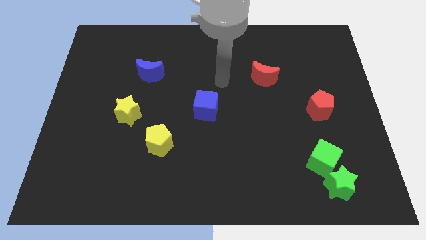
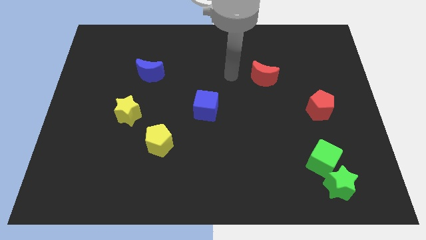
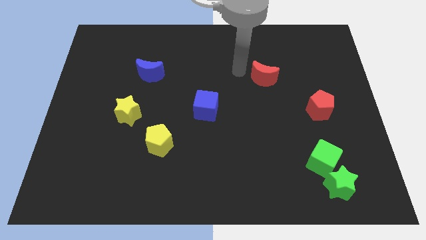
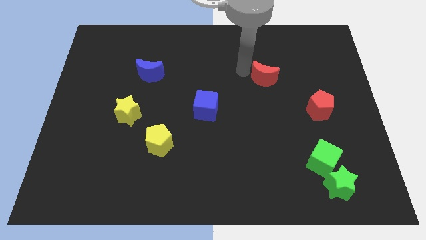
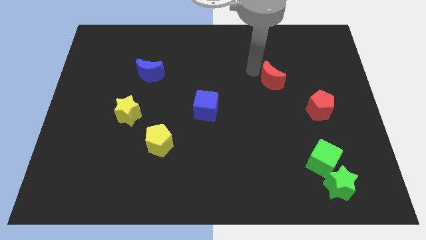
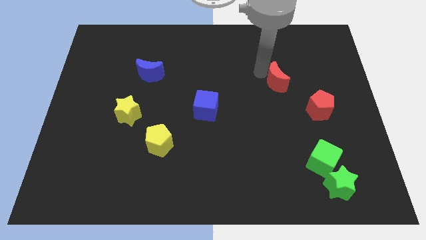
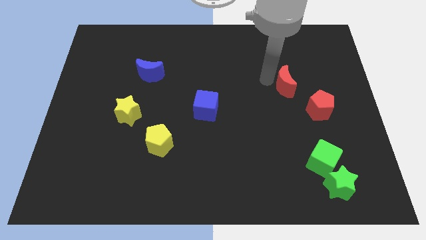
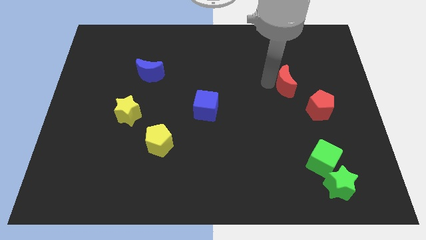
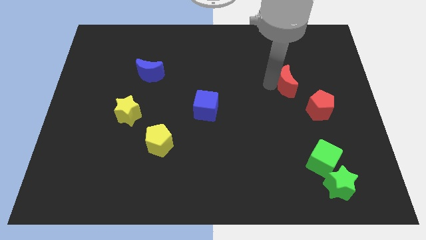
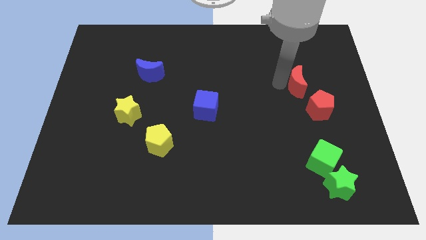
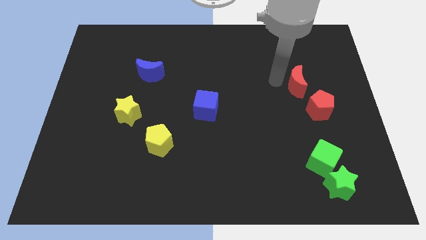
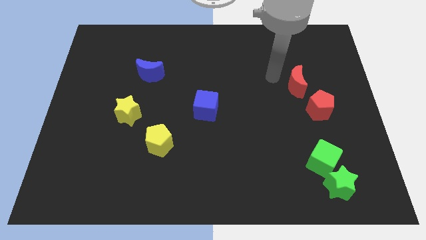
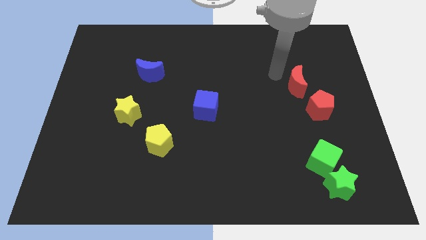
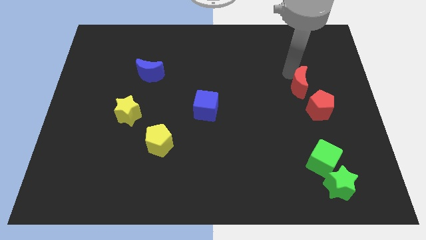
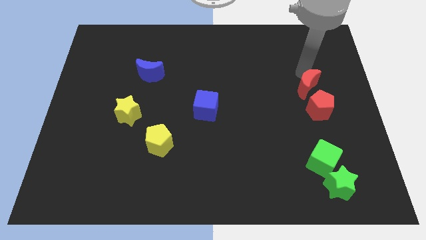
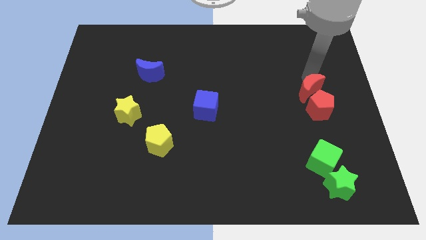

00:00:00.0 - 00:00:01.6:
place the red crescent at top left side of the red pentagon

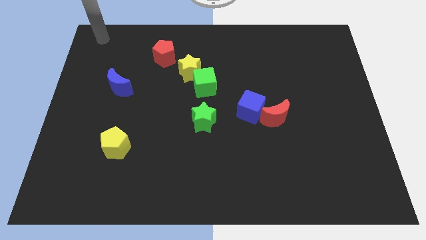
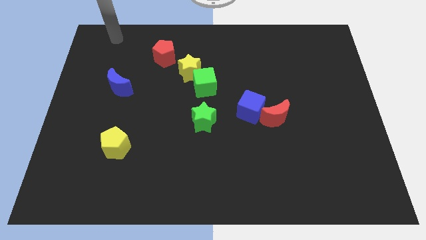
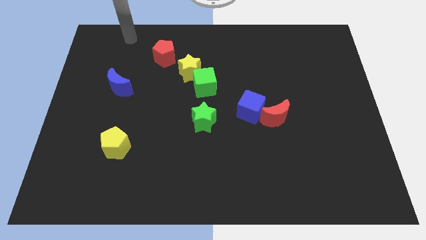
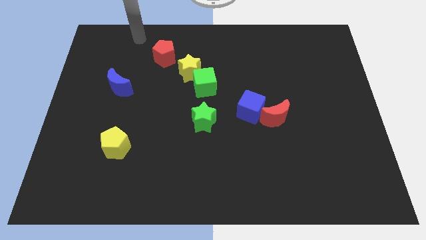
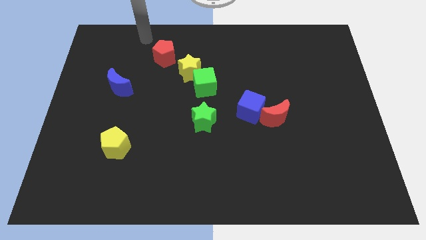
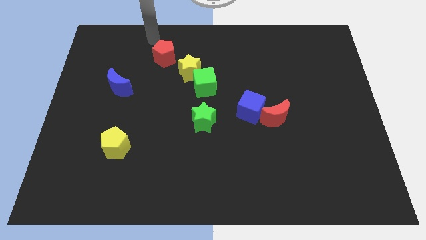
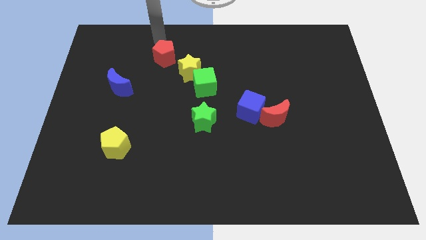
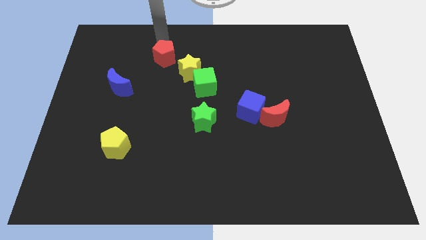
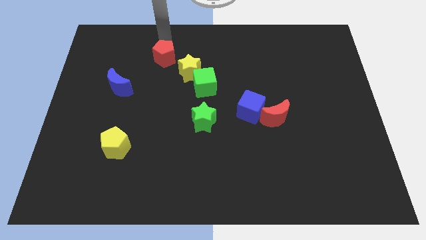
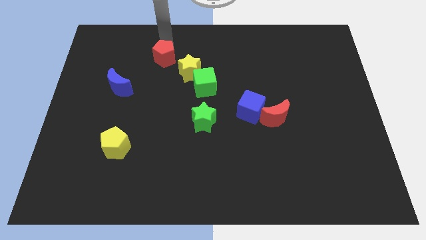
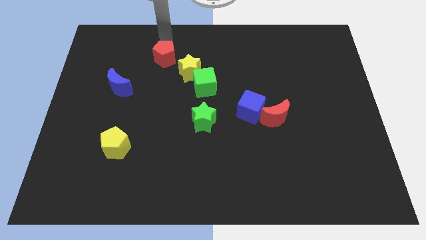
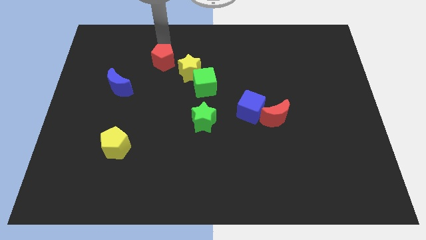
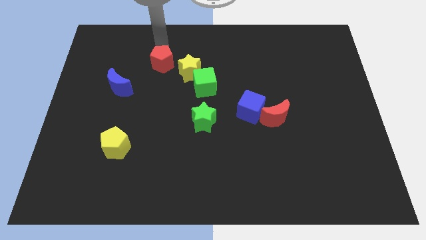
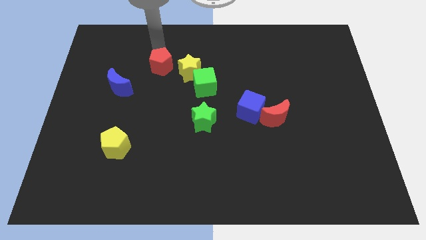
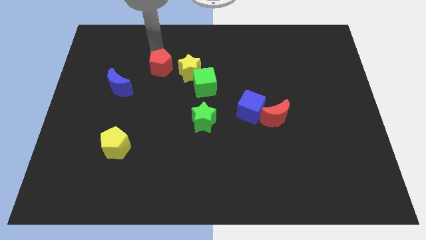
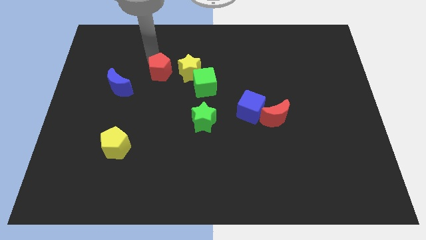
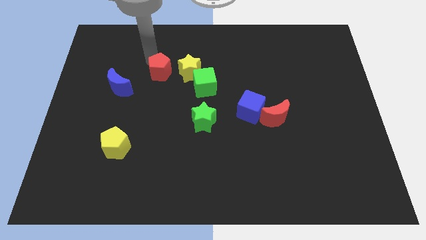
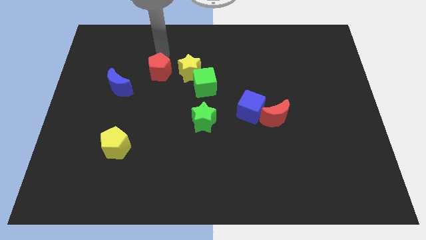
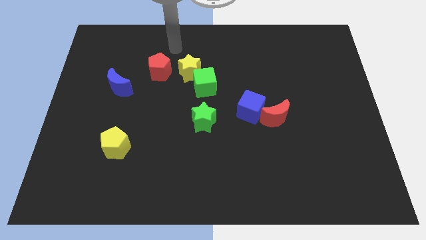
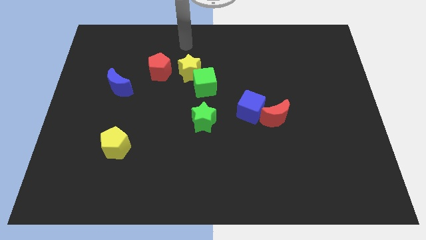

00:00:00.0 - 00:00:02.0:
push the red pentagon slightly to the bottom

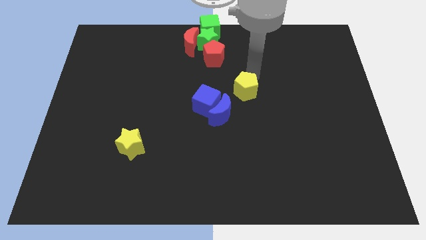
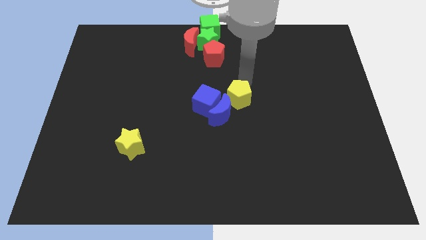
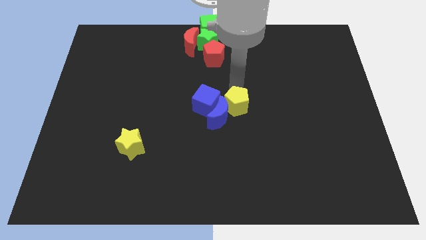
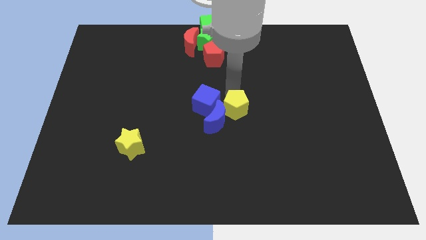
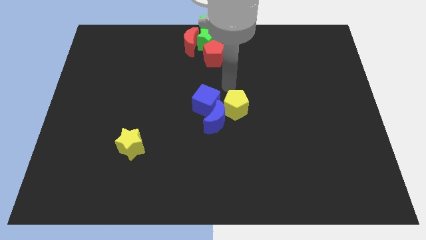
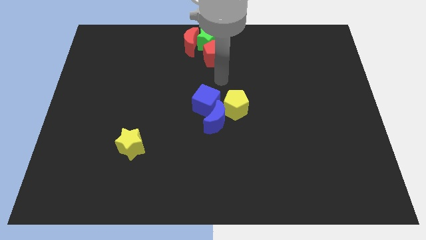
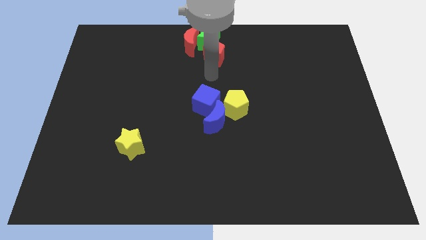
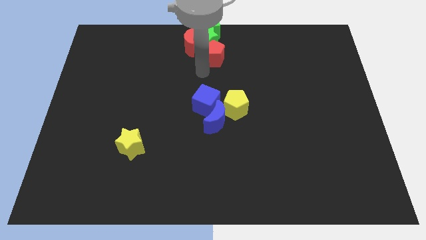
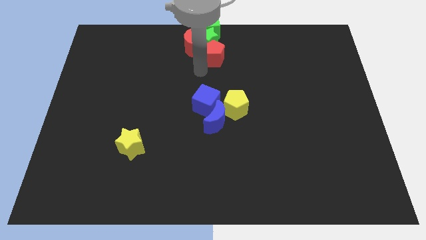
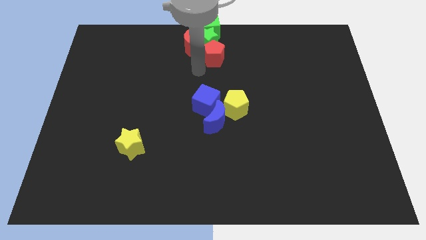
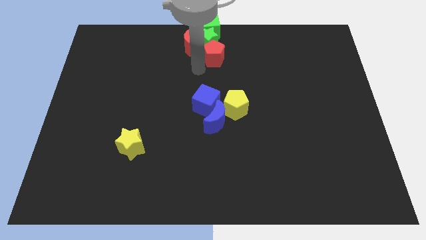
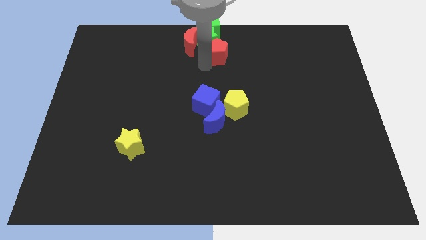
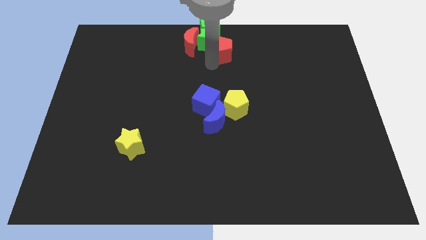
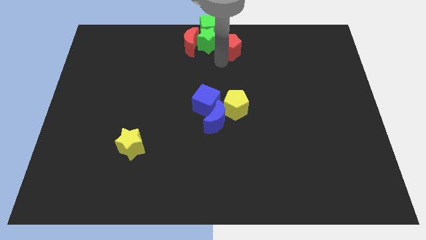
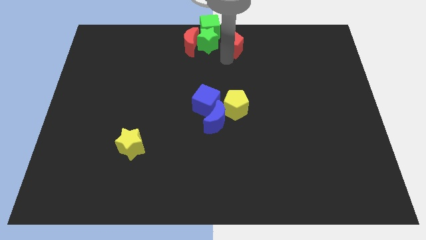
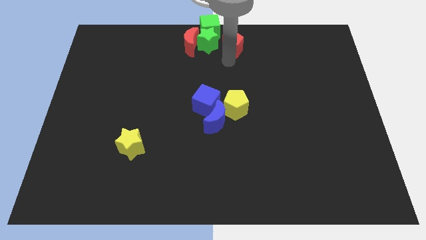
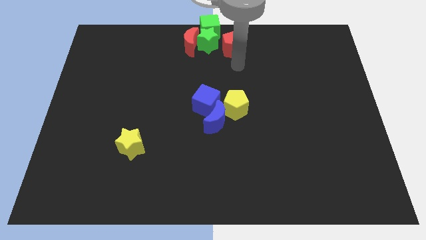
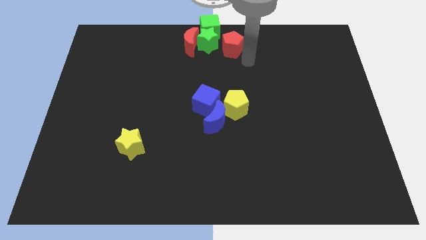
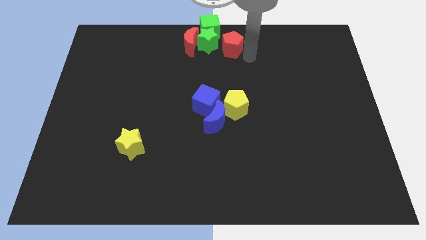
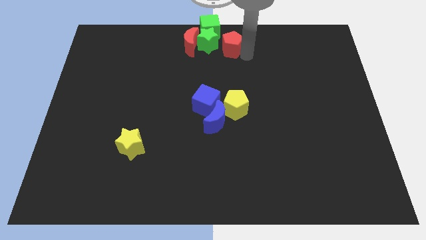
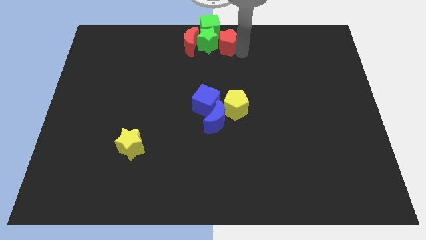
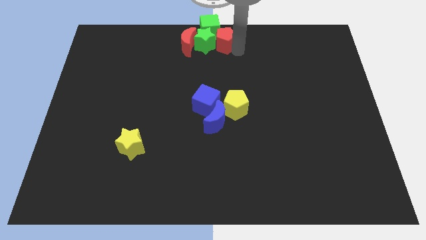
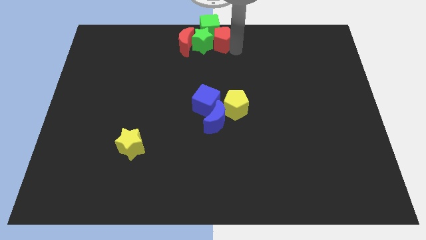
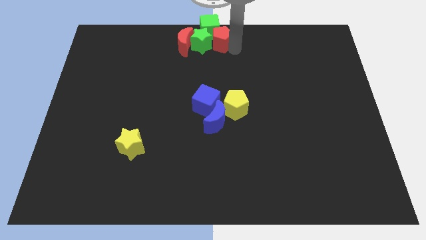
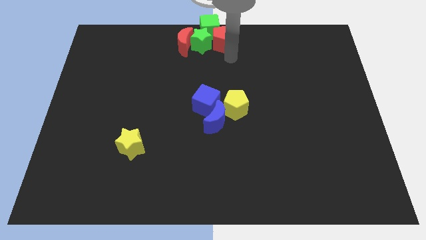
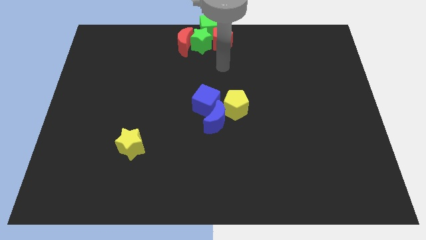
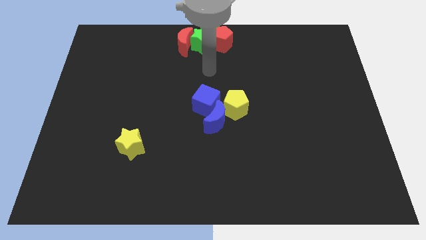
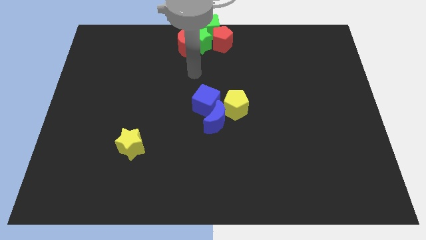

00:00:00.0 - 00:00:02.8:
push the red pentagon to the right side of the green star

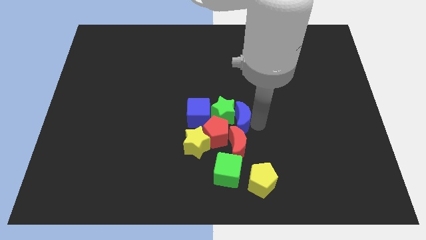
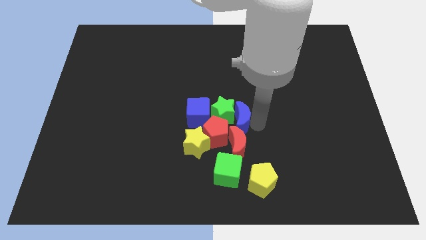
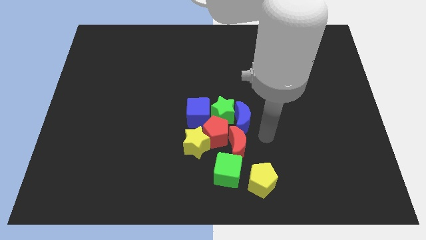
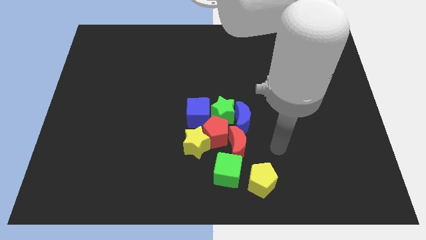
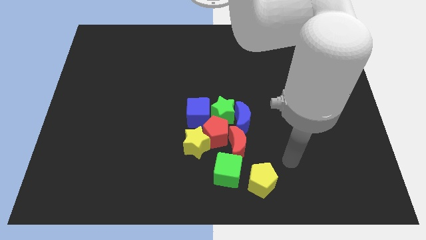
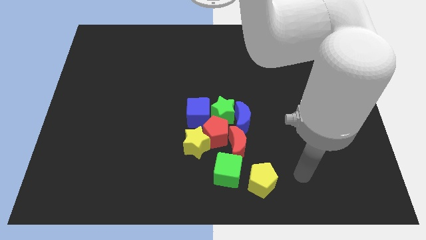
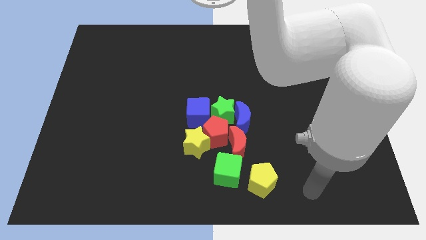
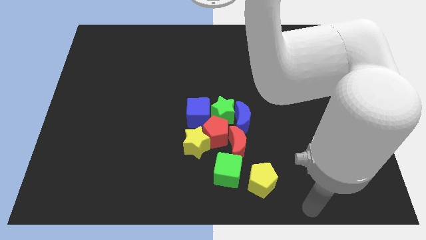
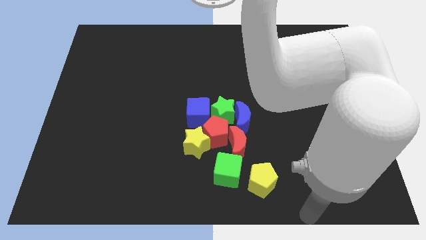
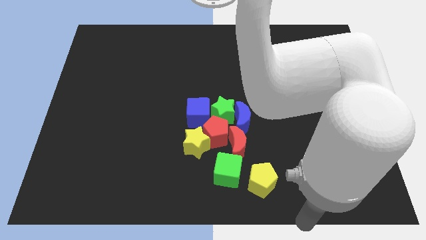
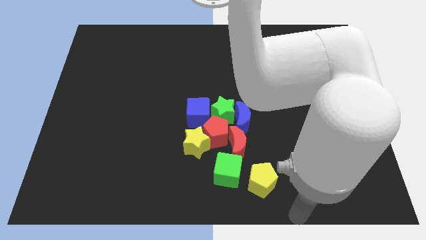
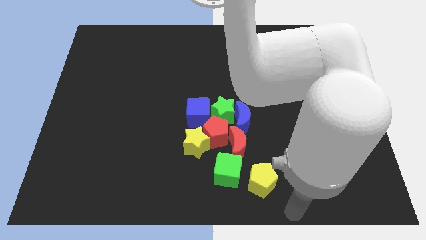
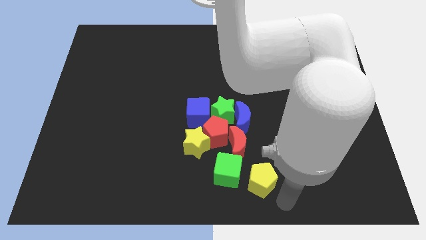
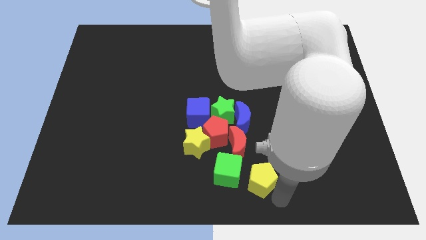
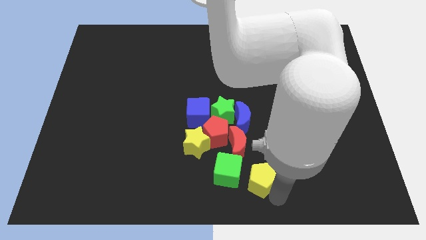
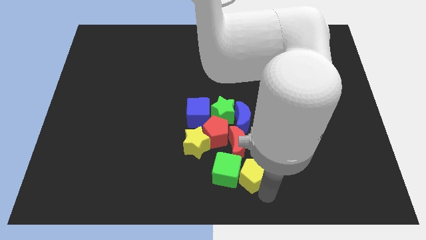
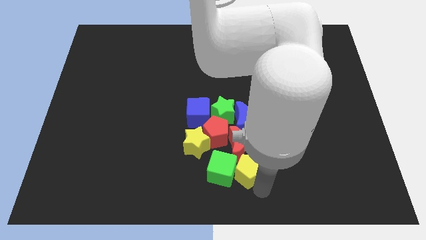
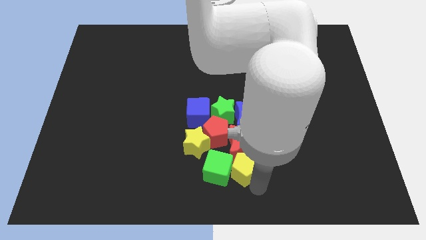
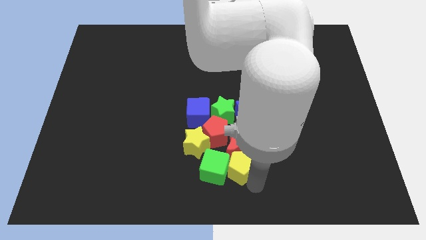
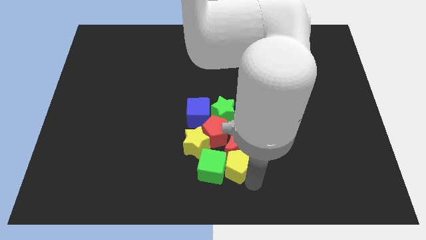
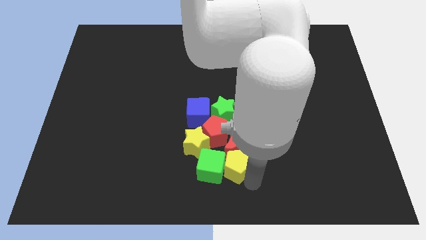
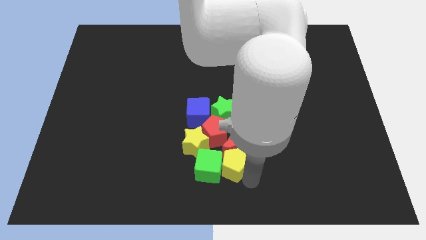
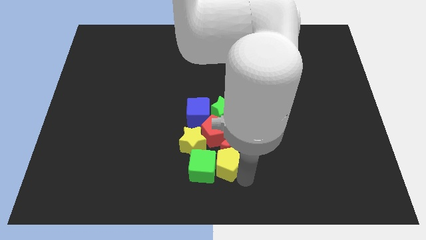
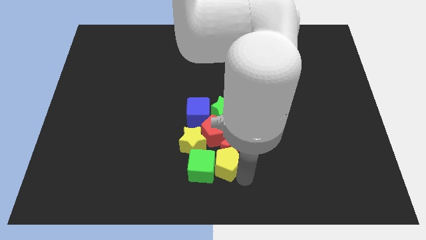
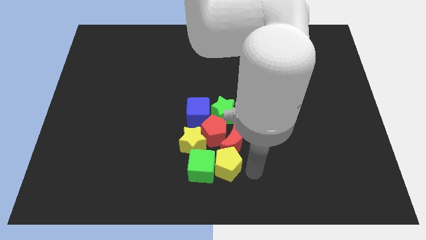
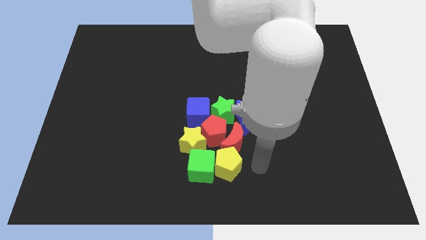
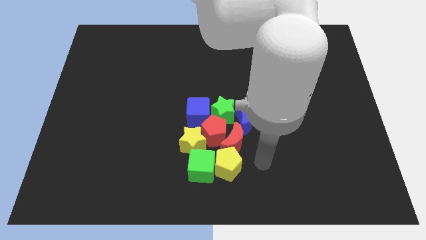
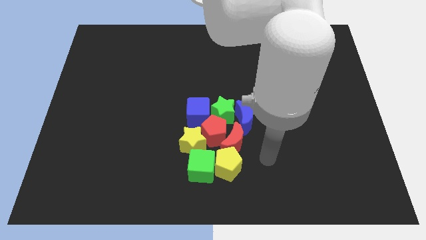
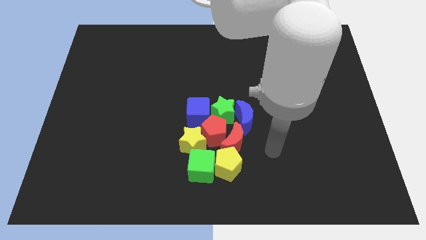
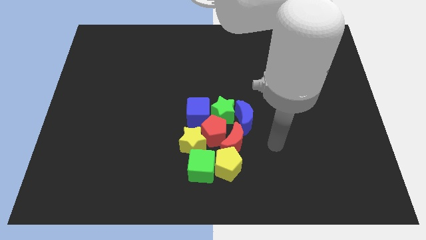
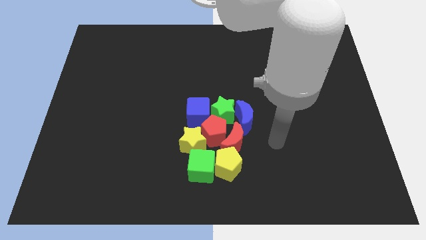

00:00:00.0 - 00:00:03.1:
push yellow pentagon into the green cube
